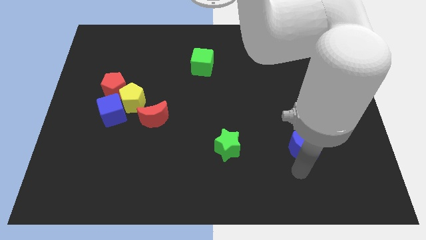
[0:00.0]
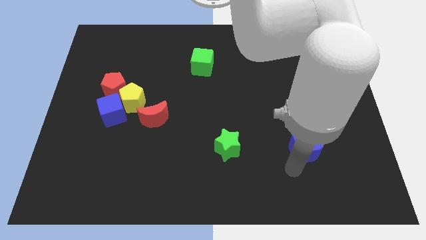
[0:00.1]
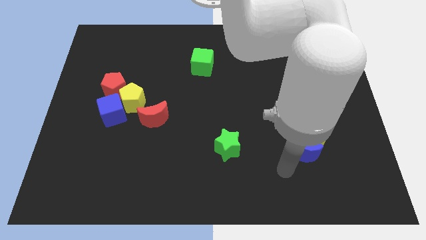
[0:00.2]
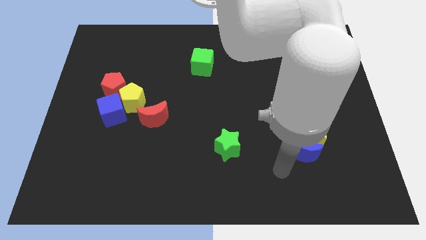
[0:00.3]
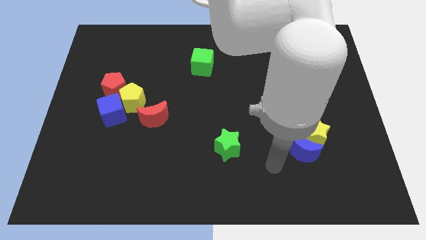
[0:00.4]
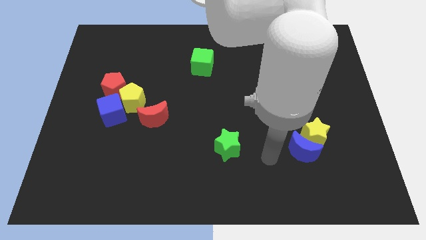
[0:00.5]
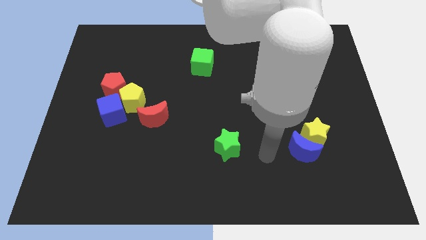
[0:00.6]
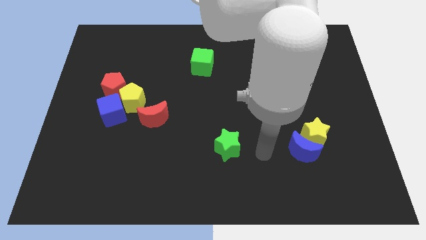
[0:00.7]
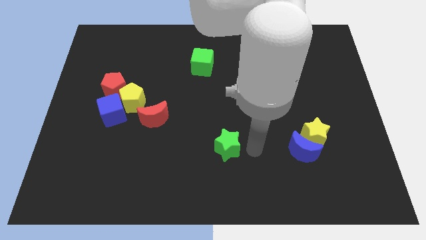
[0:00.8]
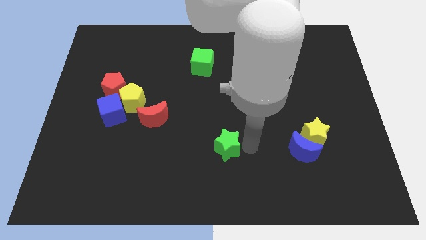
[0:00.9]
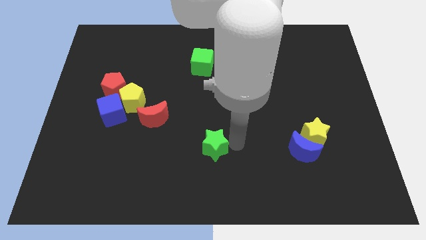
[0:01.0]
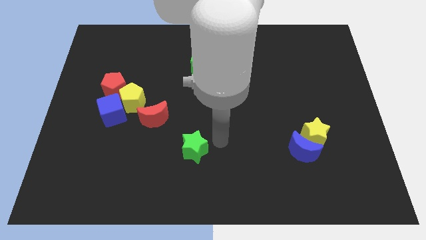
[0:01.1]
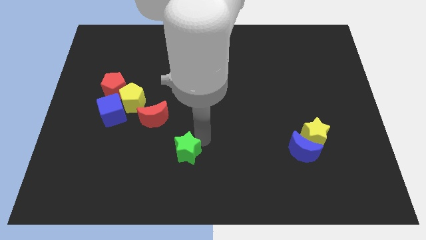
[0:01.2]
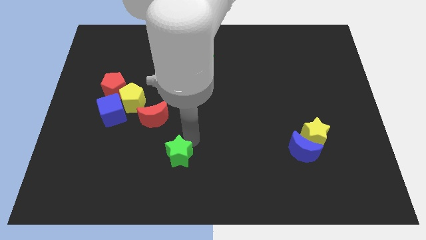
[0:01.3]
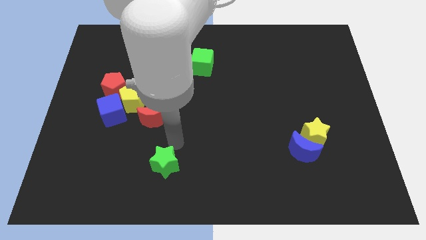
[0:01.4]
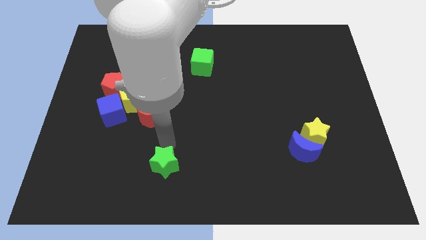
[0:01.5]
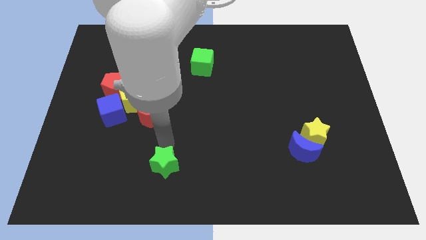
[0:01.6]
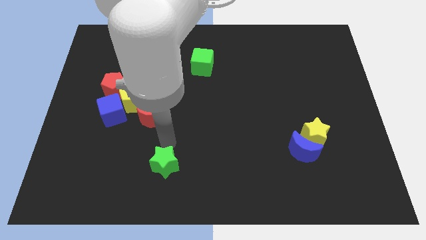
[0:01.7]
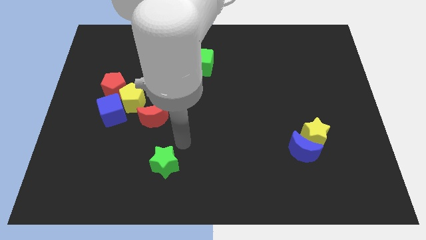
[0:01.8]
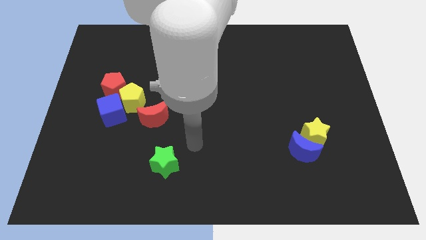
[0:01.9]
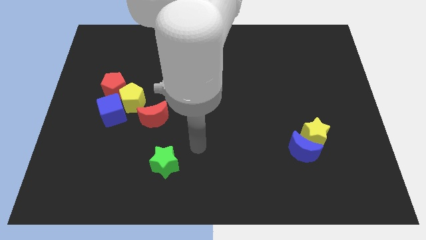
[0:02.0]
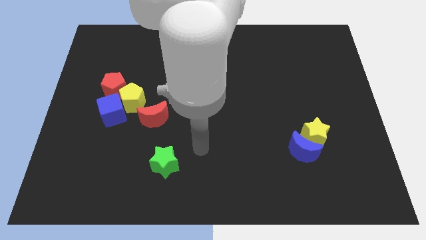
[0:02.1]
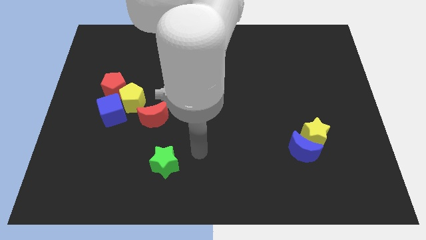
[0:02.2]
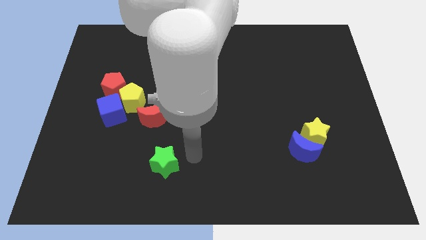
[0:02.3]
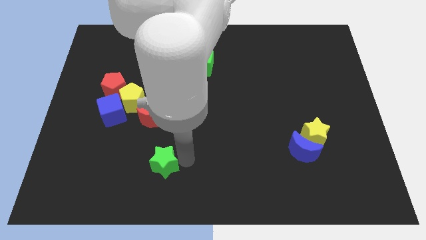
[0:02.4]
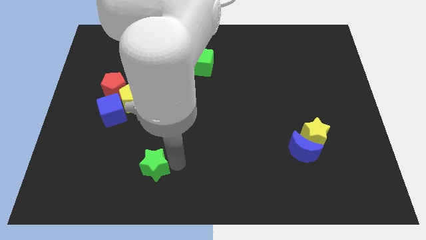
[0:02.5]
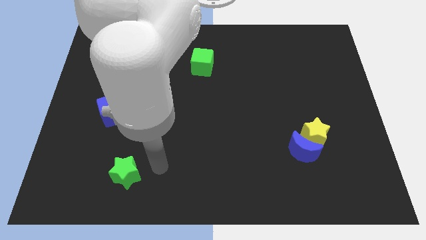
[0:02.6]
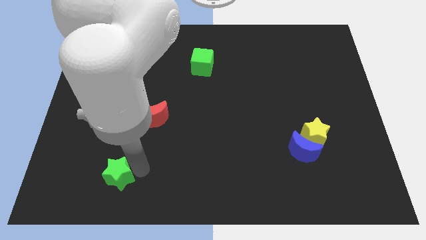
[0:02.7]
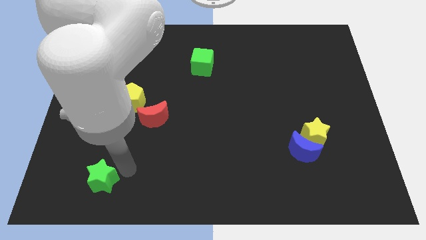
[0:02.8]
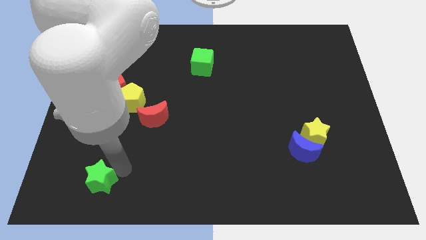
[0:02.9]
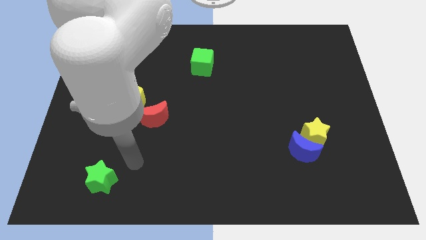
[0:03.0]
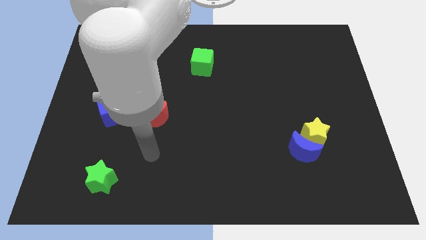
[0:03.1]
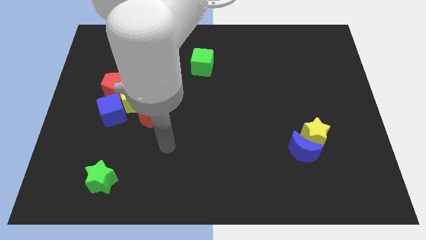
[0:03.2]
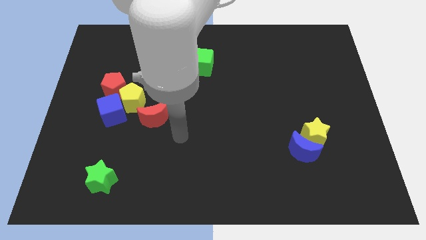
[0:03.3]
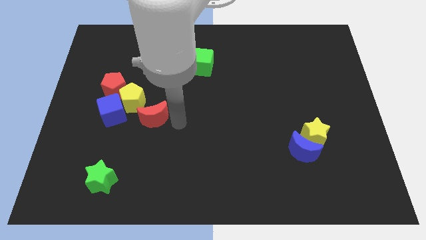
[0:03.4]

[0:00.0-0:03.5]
move the green star below the blue cube

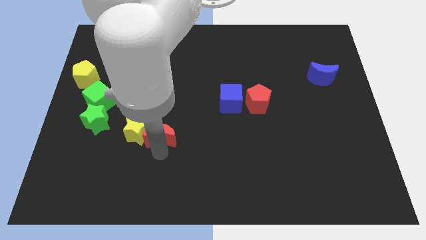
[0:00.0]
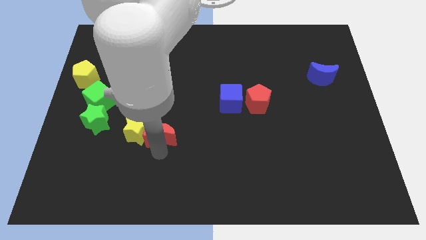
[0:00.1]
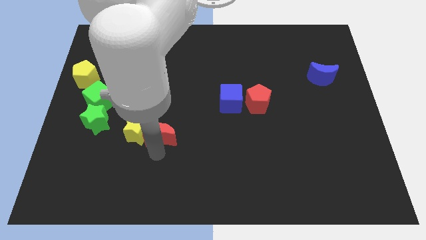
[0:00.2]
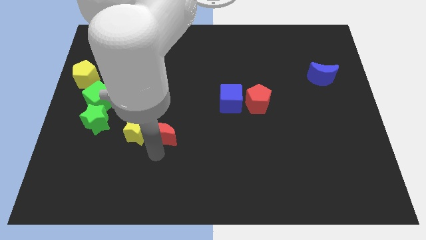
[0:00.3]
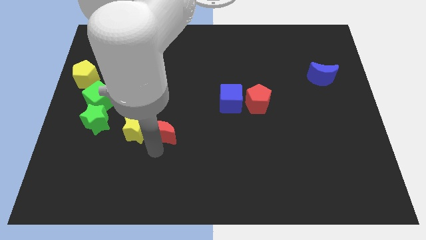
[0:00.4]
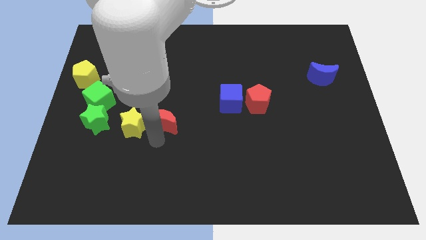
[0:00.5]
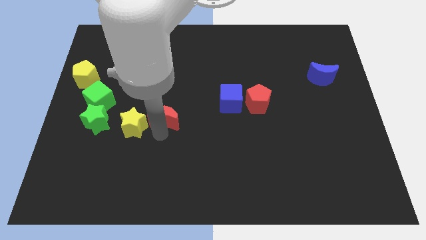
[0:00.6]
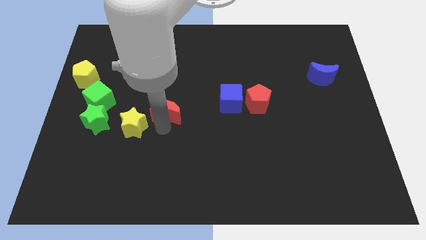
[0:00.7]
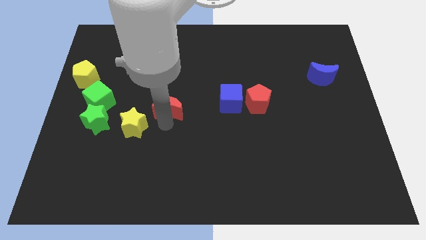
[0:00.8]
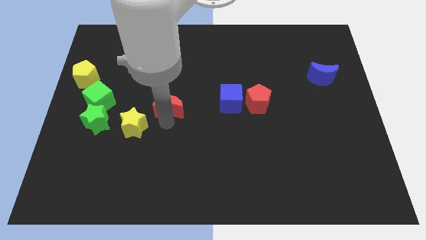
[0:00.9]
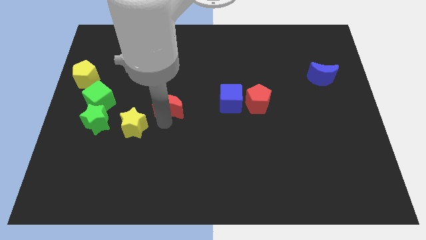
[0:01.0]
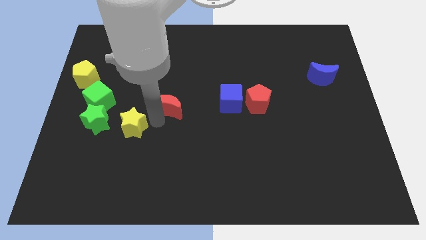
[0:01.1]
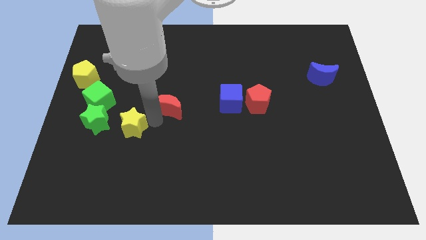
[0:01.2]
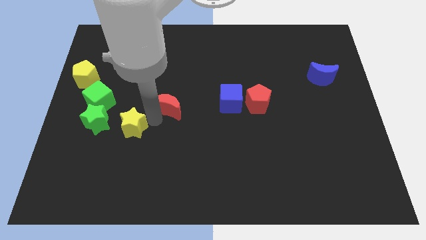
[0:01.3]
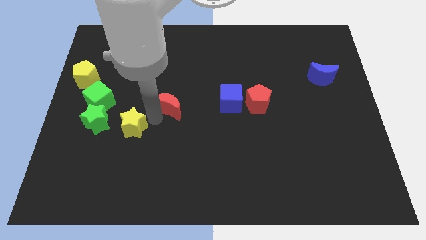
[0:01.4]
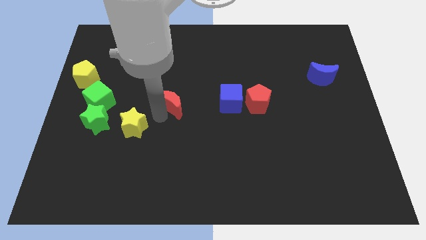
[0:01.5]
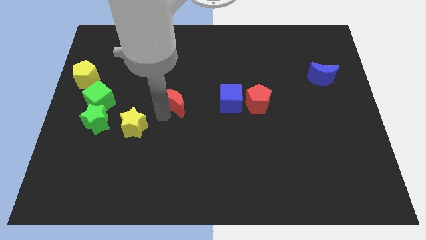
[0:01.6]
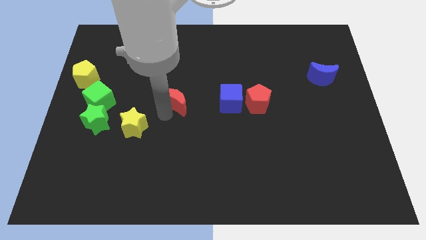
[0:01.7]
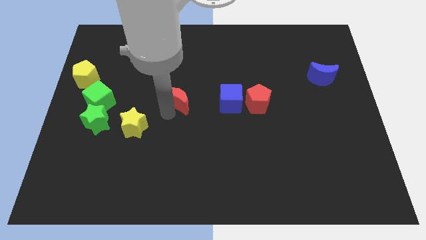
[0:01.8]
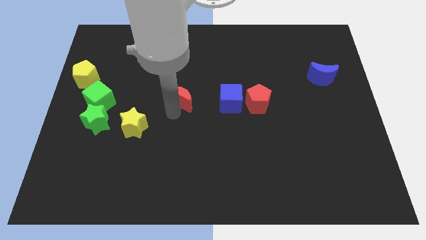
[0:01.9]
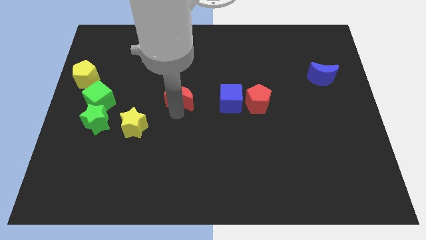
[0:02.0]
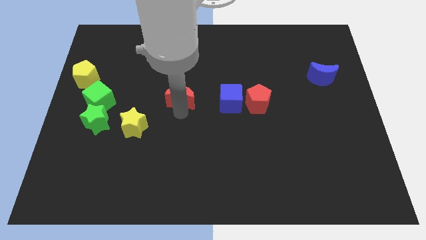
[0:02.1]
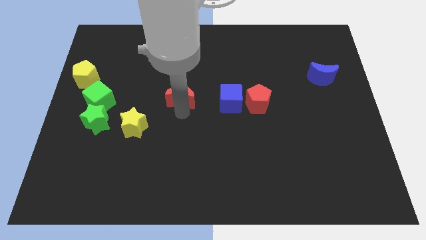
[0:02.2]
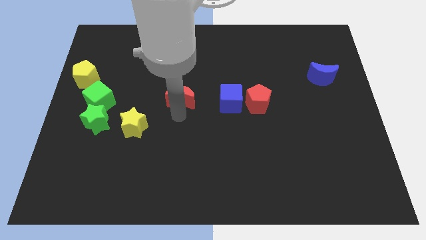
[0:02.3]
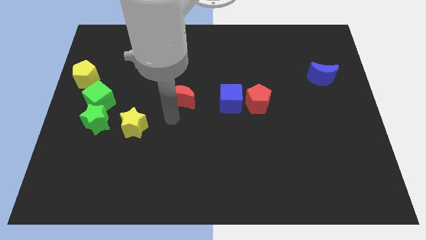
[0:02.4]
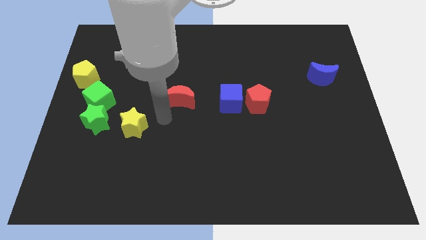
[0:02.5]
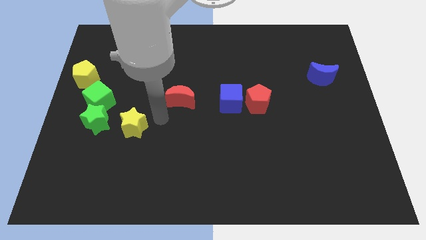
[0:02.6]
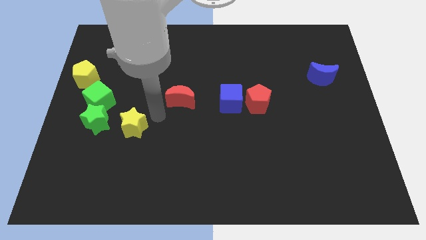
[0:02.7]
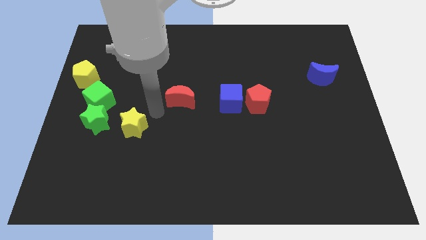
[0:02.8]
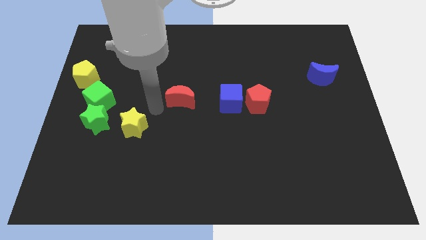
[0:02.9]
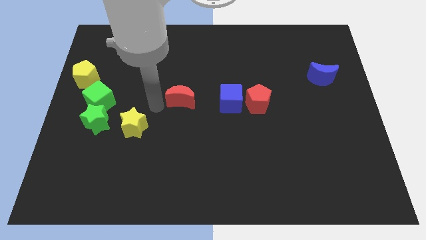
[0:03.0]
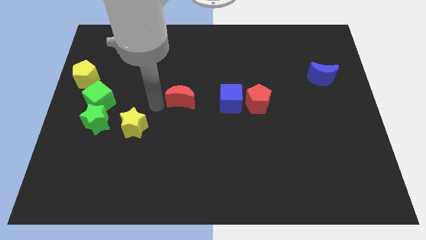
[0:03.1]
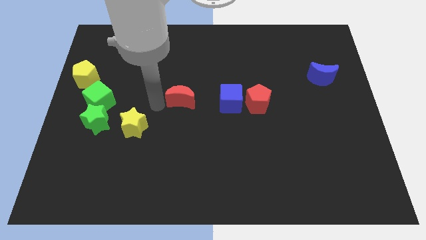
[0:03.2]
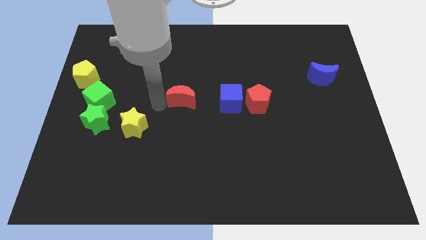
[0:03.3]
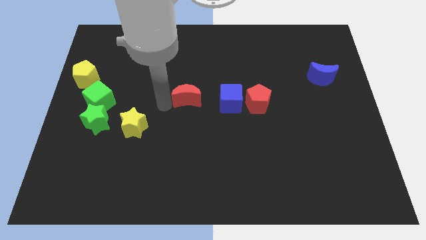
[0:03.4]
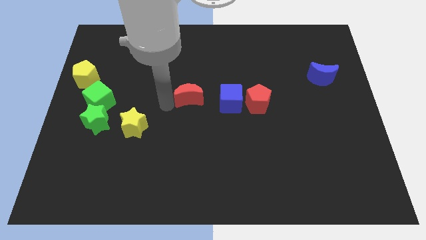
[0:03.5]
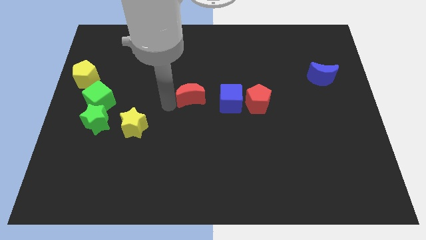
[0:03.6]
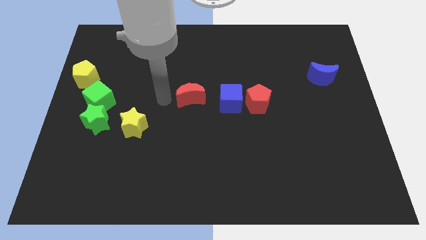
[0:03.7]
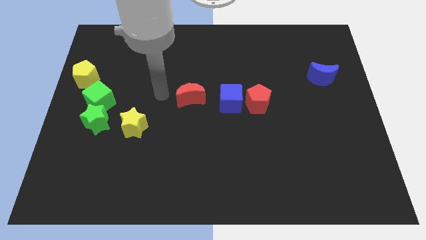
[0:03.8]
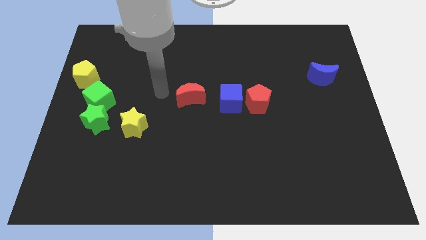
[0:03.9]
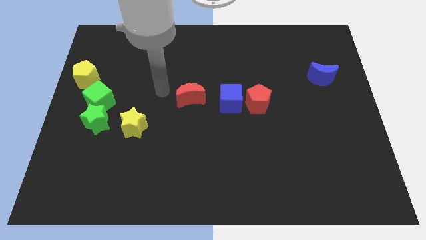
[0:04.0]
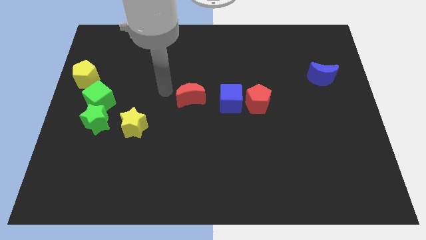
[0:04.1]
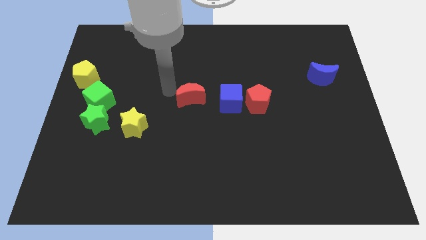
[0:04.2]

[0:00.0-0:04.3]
push red crescent apart from yellow star

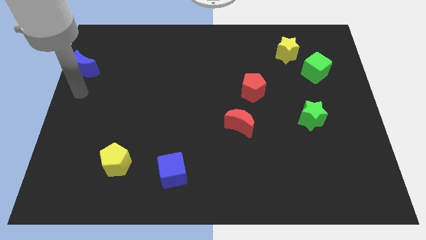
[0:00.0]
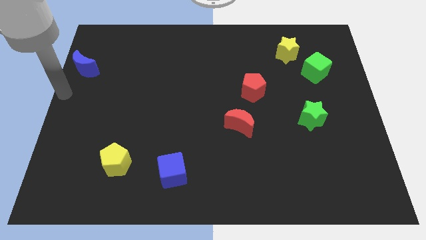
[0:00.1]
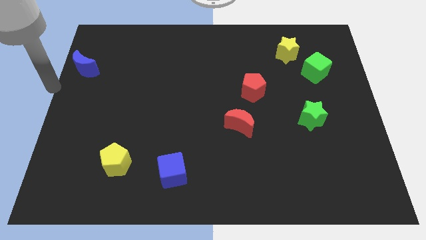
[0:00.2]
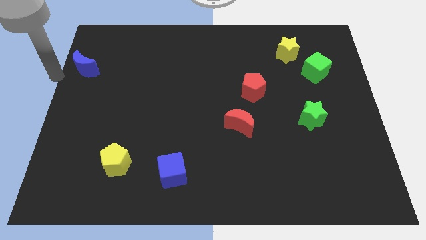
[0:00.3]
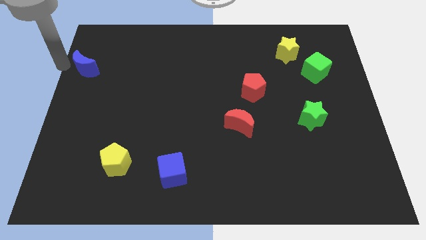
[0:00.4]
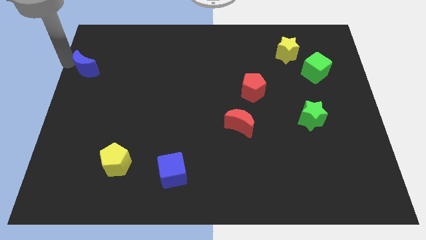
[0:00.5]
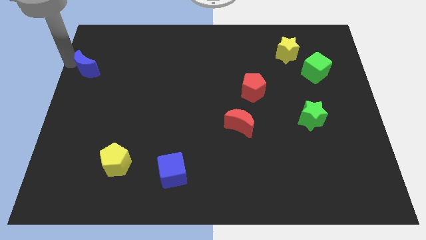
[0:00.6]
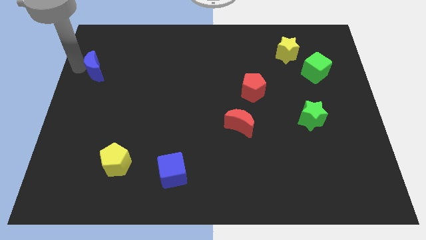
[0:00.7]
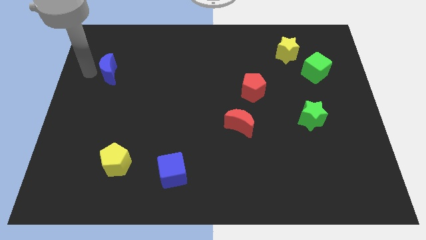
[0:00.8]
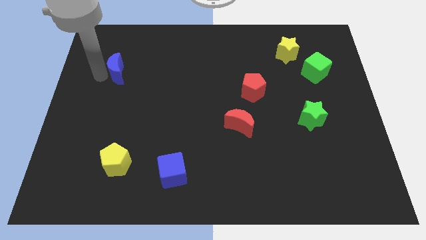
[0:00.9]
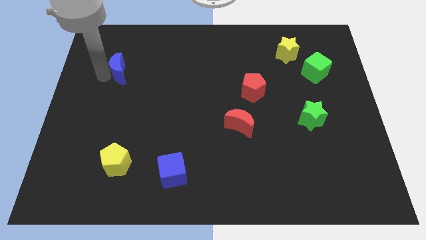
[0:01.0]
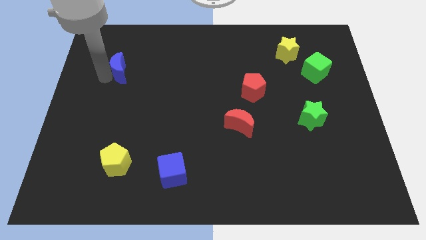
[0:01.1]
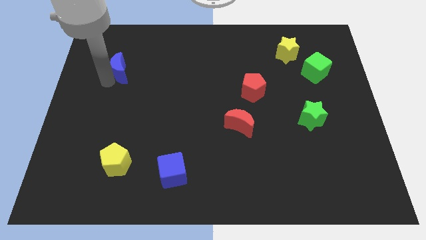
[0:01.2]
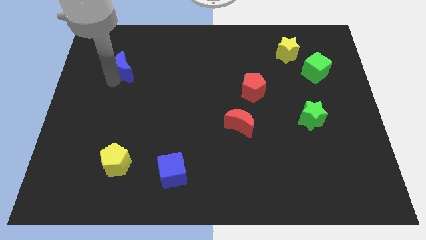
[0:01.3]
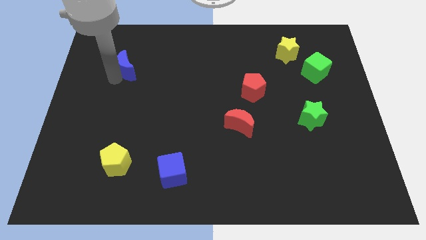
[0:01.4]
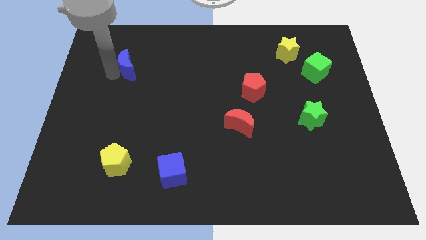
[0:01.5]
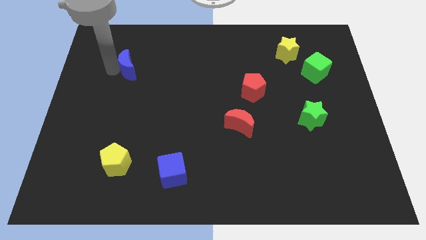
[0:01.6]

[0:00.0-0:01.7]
move the blue moon vertically above the yellow pentagon
